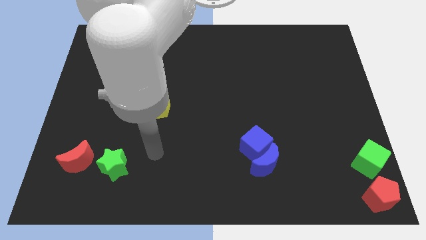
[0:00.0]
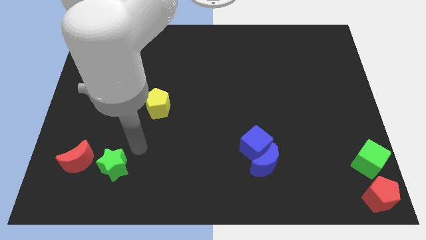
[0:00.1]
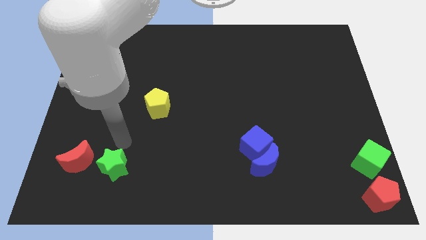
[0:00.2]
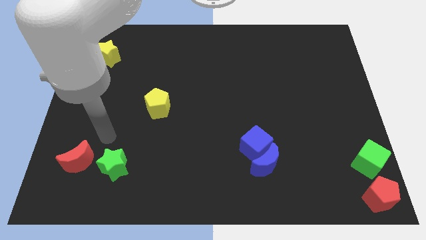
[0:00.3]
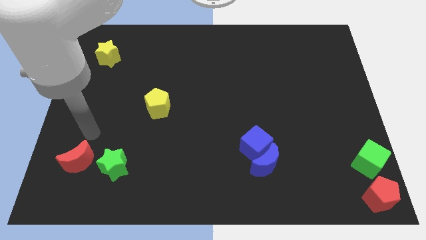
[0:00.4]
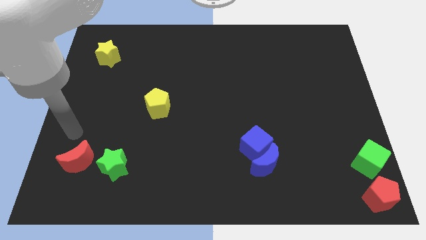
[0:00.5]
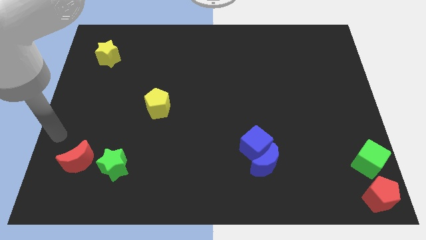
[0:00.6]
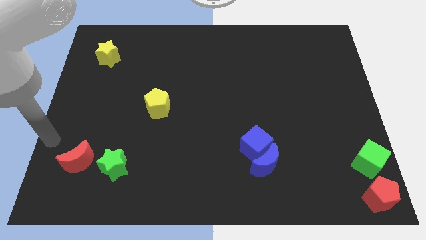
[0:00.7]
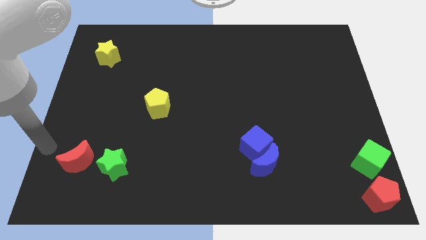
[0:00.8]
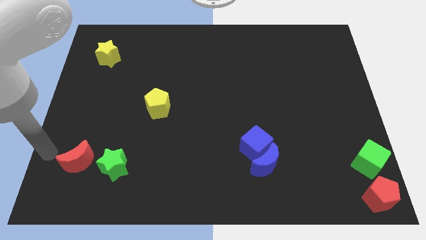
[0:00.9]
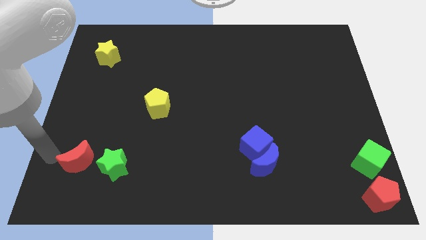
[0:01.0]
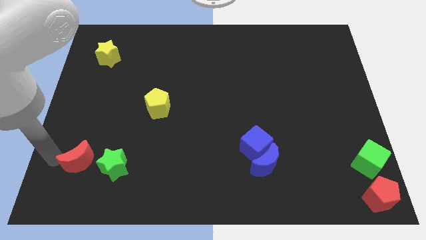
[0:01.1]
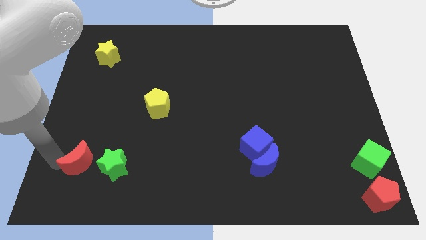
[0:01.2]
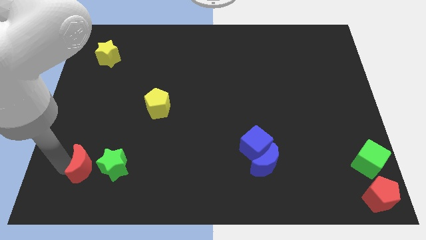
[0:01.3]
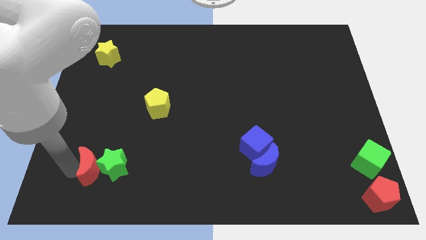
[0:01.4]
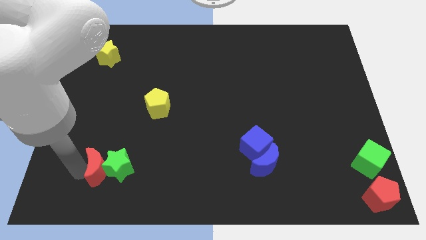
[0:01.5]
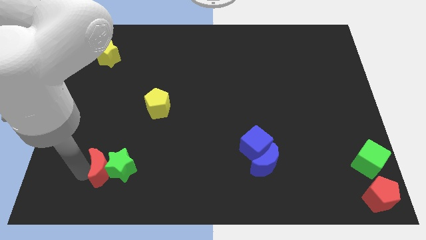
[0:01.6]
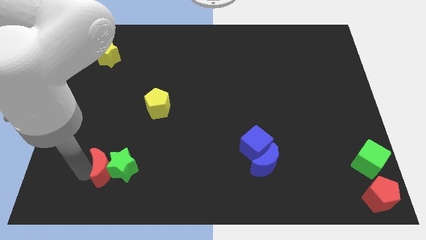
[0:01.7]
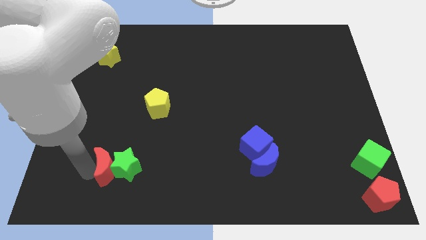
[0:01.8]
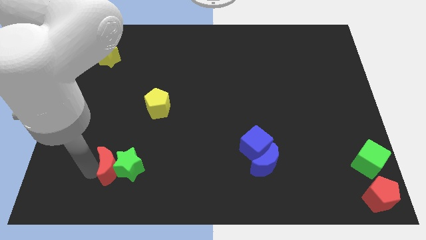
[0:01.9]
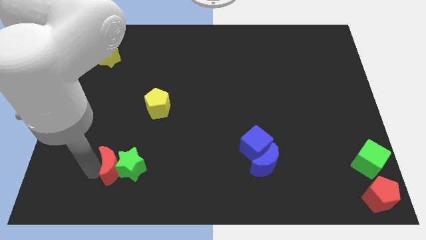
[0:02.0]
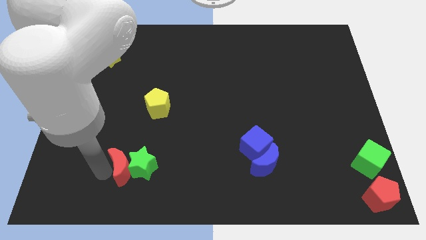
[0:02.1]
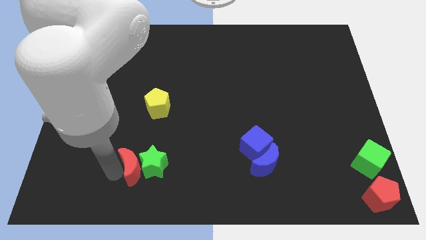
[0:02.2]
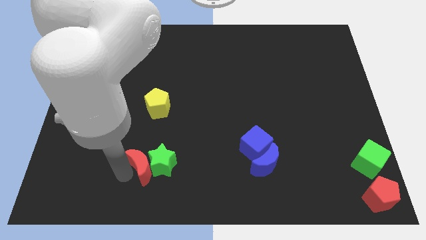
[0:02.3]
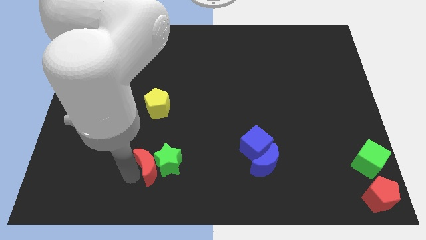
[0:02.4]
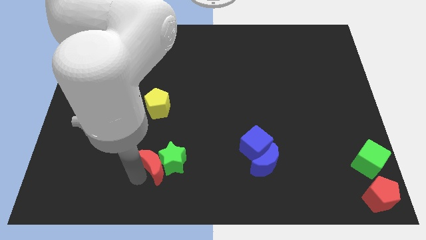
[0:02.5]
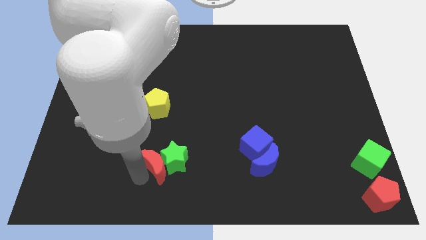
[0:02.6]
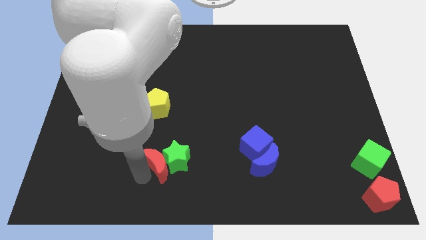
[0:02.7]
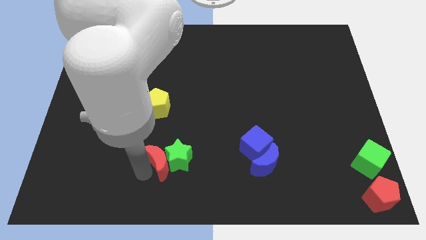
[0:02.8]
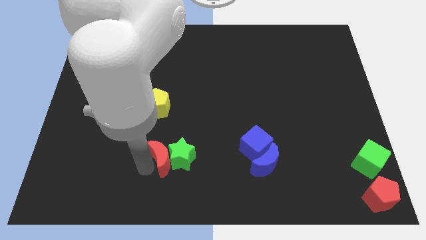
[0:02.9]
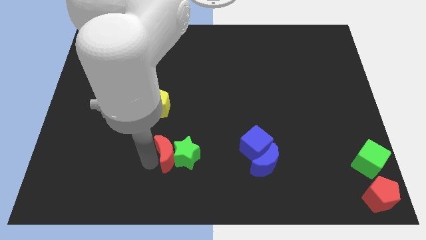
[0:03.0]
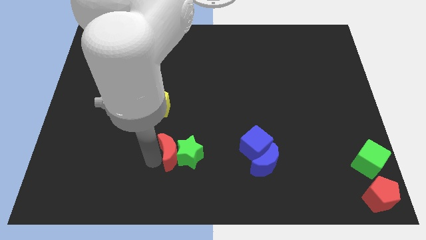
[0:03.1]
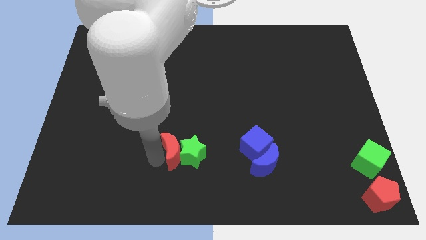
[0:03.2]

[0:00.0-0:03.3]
move the green star with a red crescent towards the right of the board

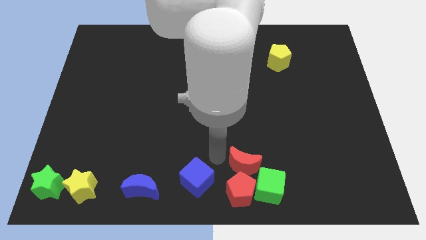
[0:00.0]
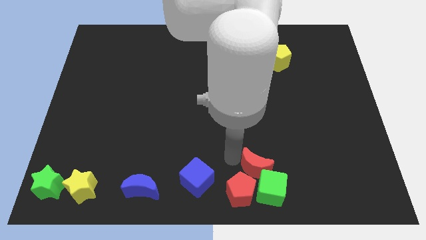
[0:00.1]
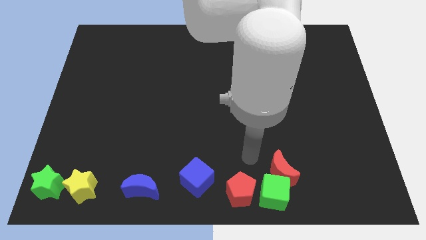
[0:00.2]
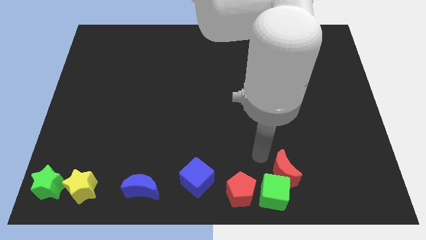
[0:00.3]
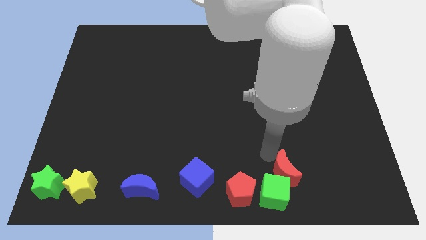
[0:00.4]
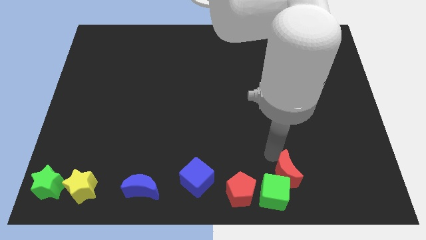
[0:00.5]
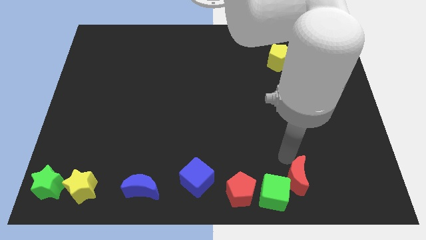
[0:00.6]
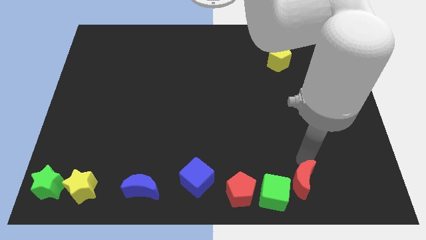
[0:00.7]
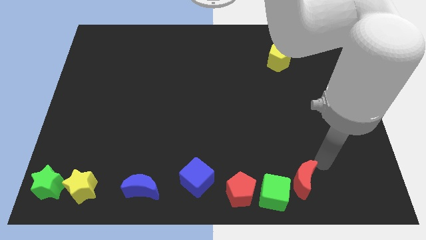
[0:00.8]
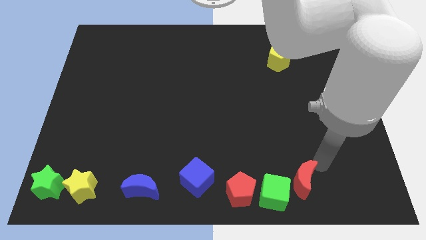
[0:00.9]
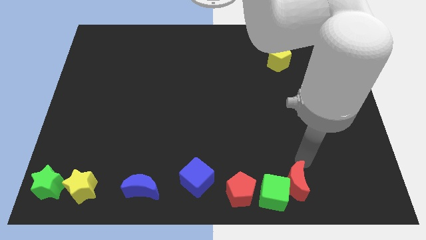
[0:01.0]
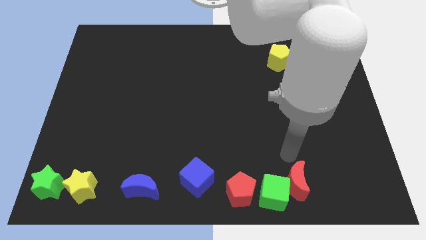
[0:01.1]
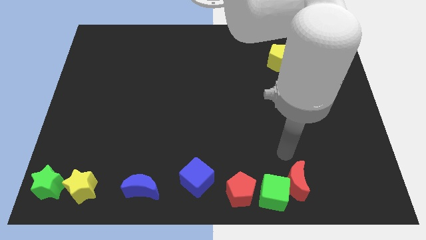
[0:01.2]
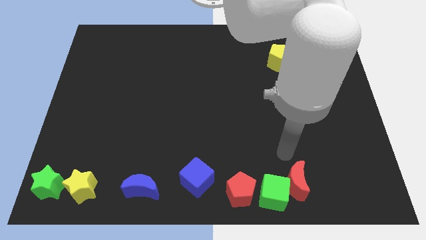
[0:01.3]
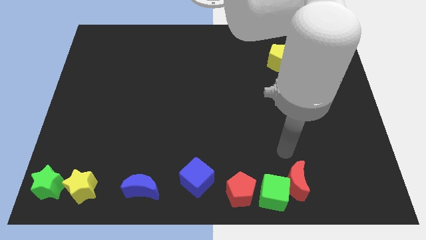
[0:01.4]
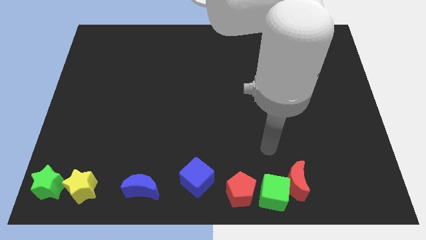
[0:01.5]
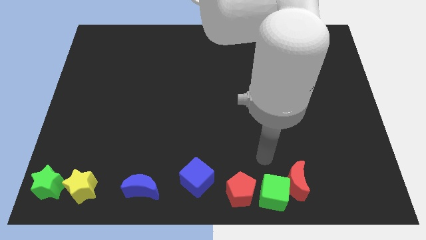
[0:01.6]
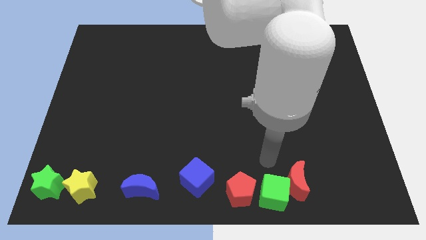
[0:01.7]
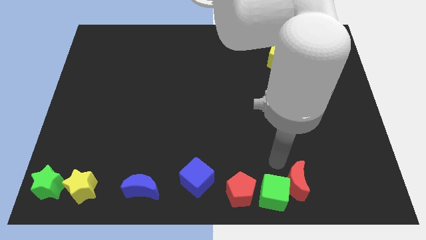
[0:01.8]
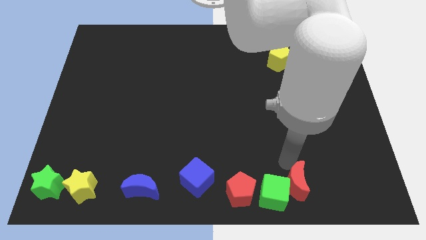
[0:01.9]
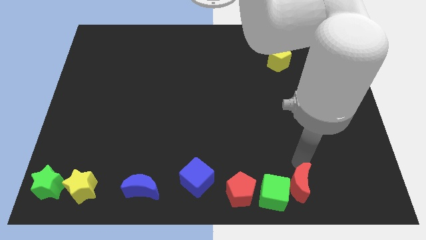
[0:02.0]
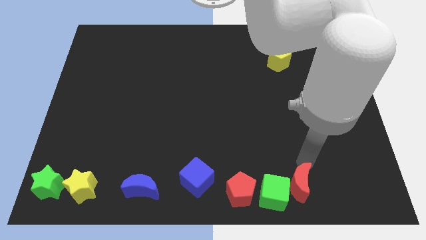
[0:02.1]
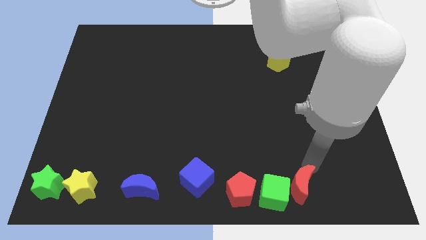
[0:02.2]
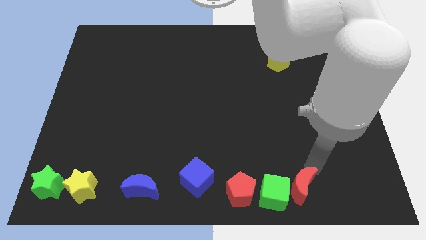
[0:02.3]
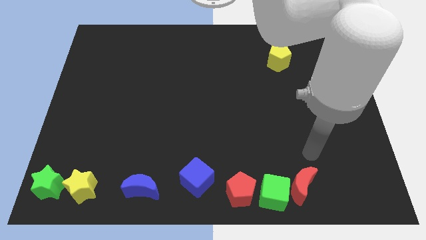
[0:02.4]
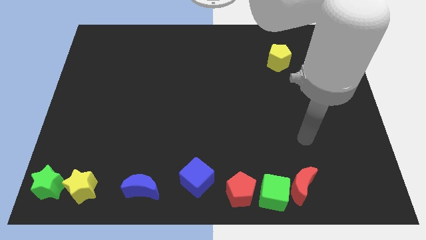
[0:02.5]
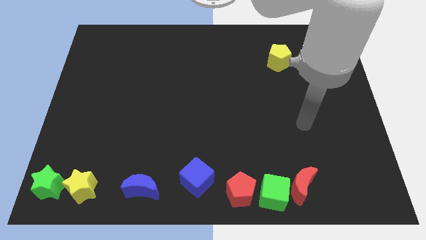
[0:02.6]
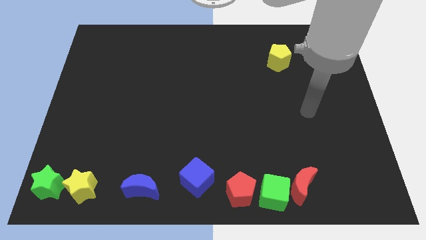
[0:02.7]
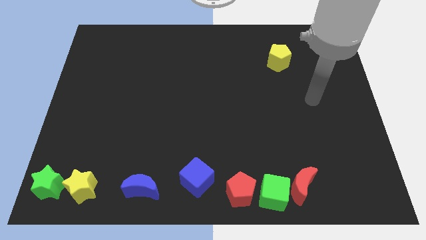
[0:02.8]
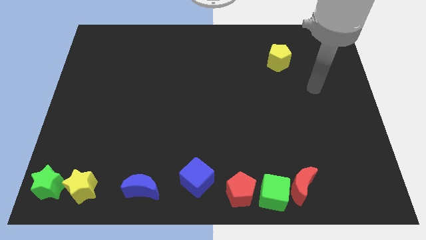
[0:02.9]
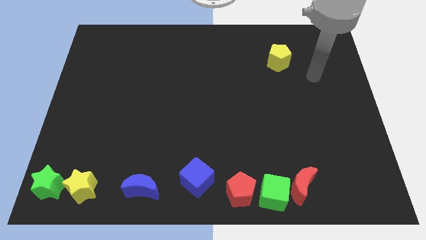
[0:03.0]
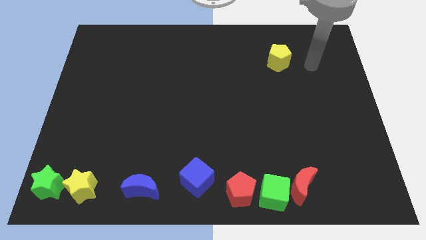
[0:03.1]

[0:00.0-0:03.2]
put the red moon diagonally bottom right to the yellow pentagon

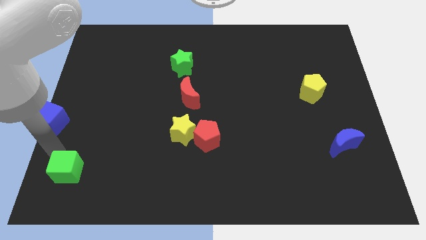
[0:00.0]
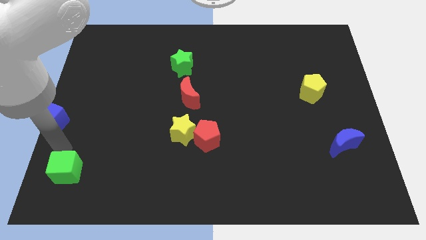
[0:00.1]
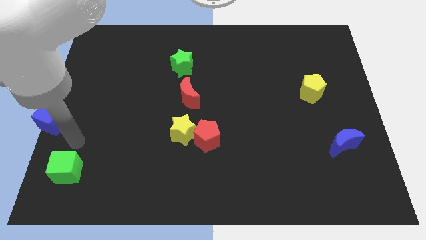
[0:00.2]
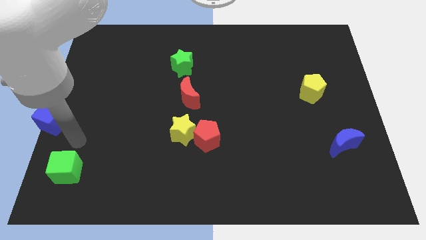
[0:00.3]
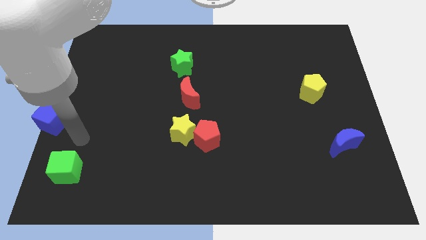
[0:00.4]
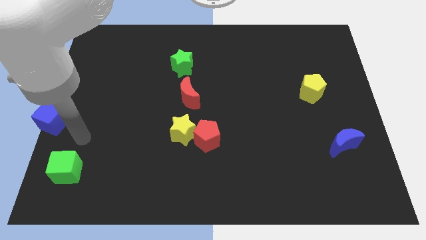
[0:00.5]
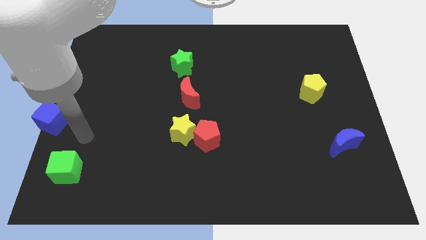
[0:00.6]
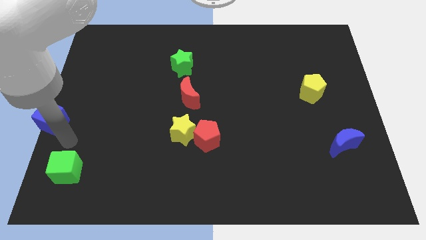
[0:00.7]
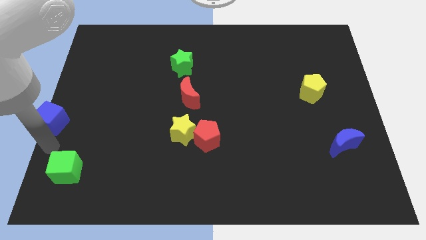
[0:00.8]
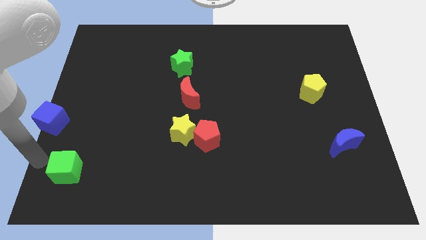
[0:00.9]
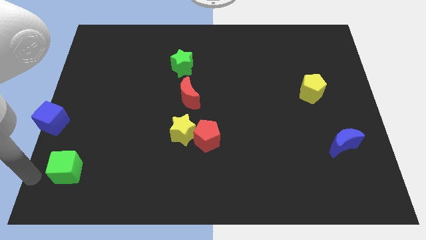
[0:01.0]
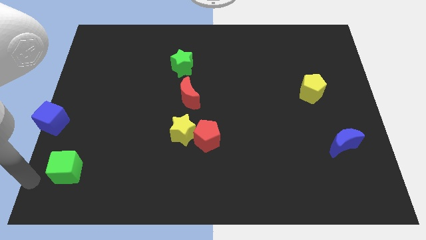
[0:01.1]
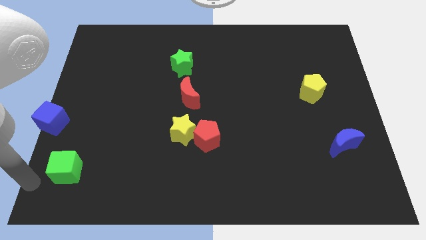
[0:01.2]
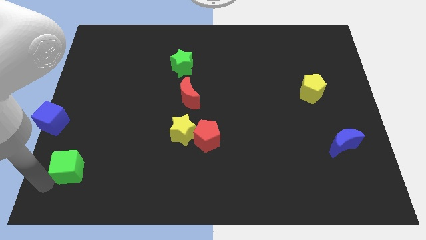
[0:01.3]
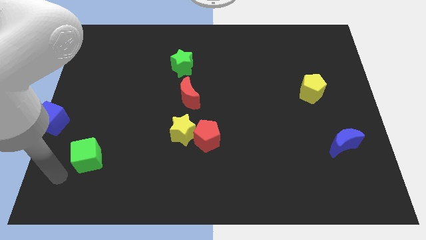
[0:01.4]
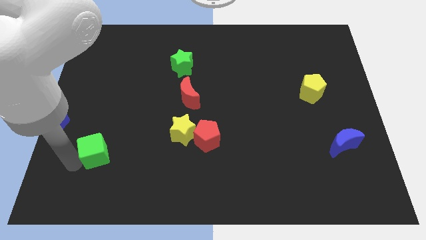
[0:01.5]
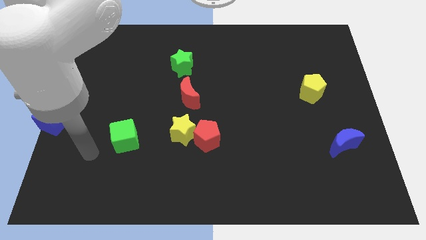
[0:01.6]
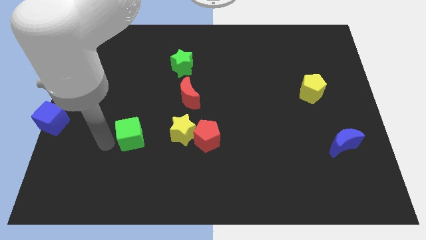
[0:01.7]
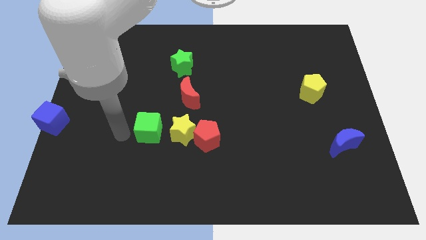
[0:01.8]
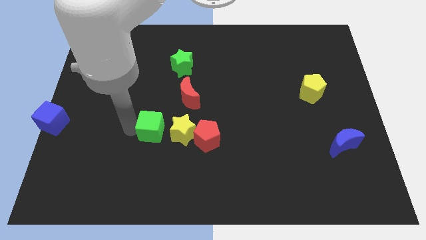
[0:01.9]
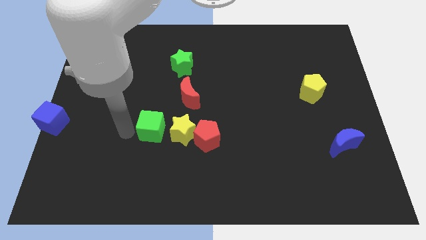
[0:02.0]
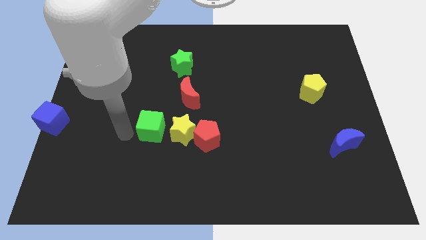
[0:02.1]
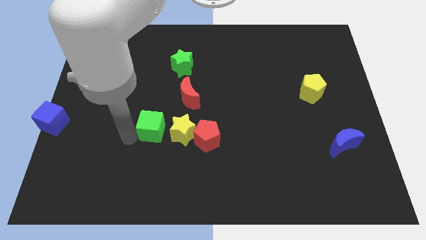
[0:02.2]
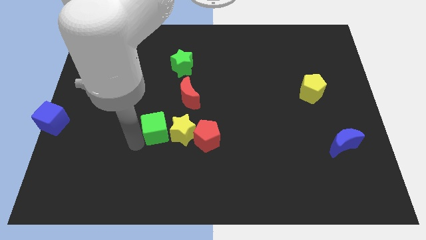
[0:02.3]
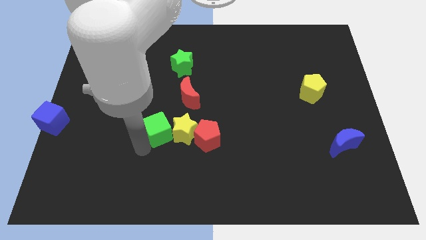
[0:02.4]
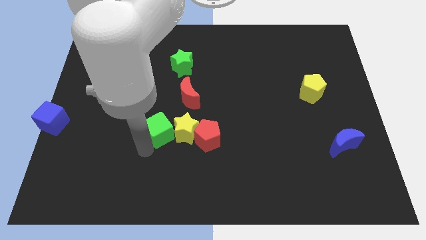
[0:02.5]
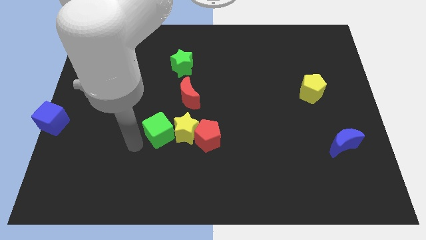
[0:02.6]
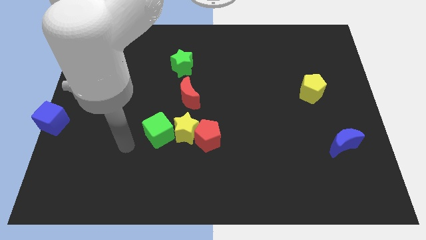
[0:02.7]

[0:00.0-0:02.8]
move the green cube into the left side of the yellow star
